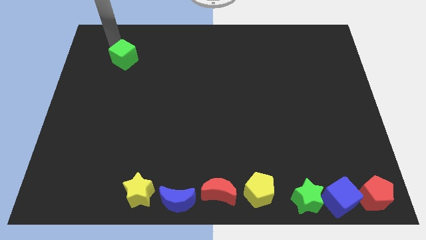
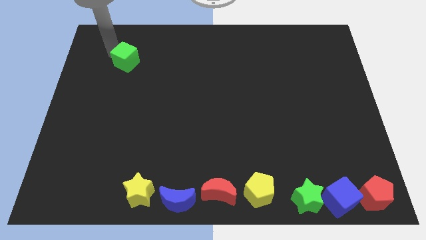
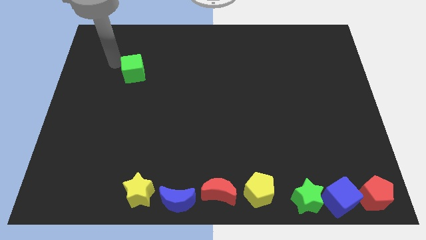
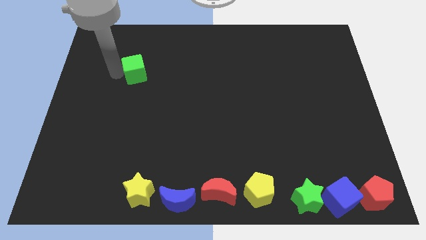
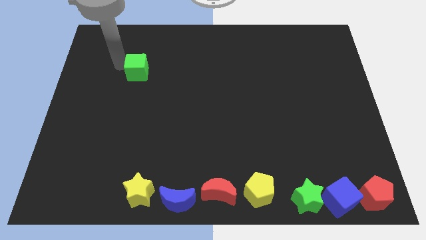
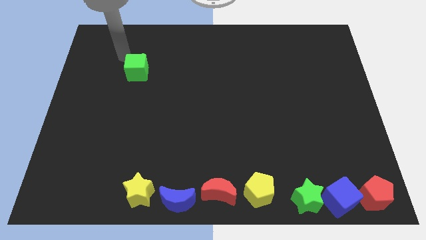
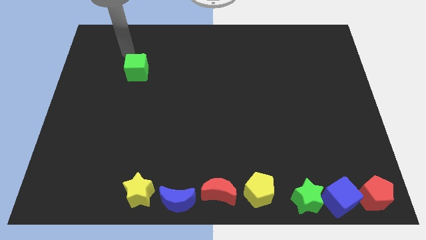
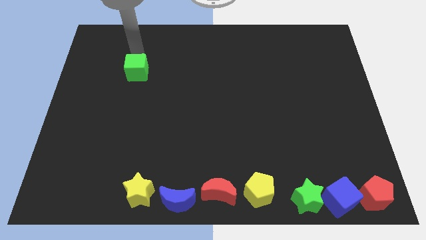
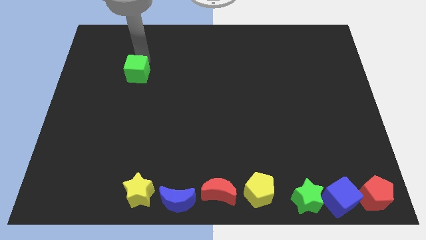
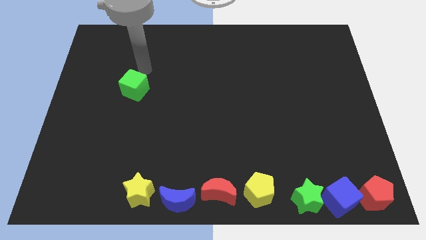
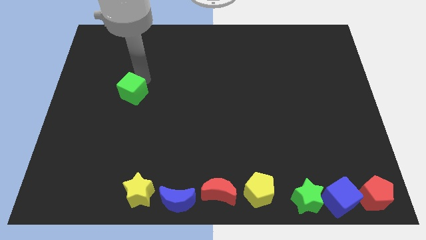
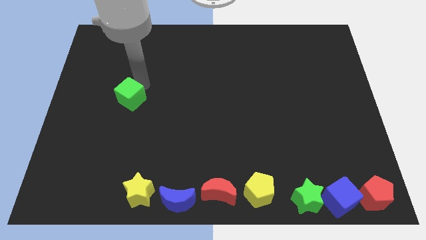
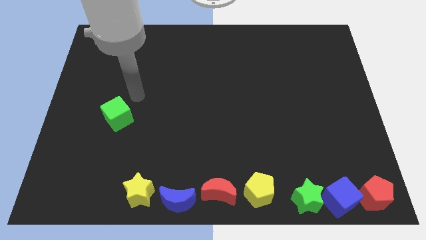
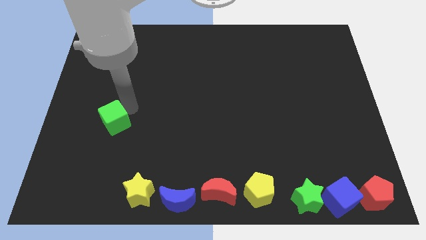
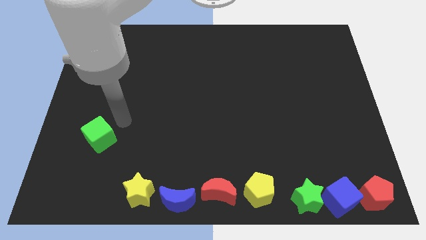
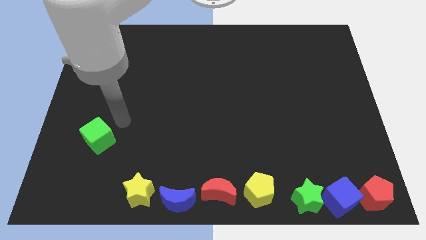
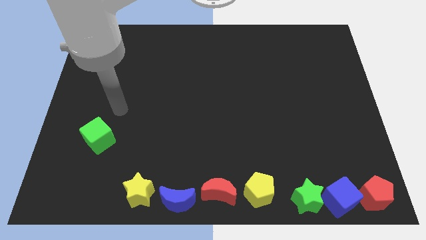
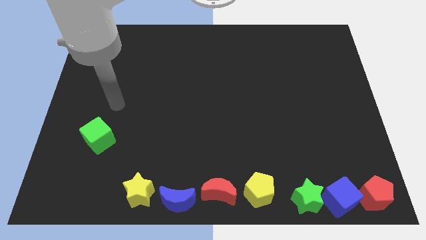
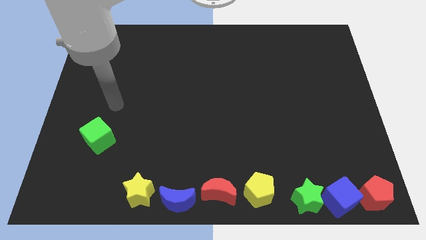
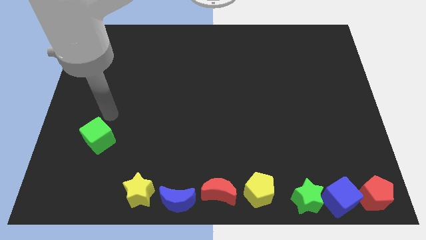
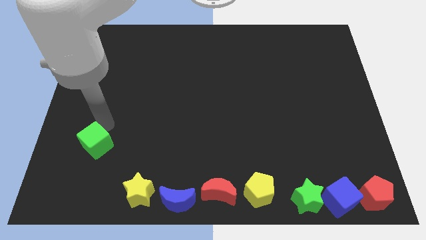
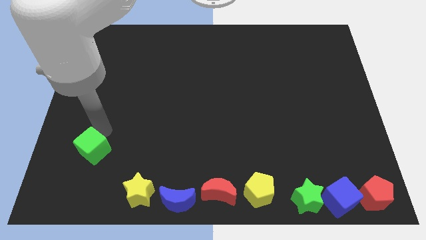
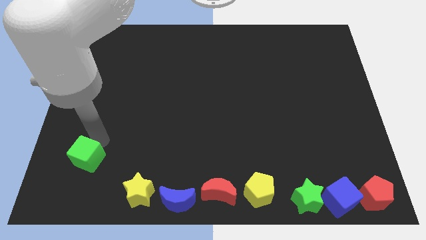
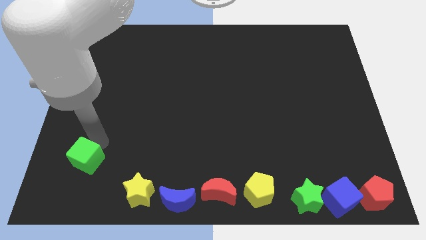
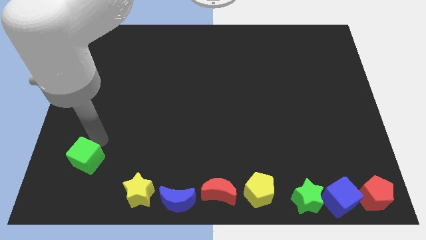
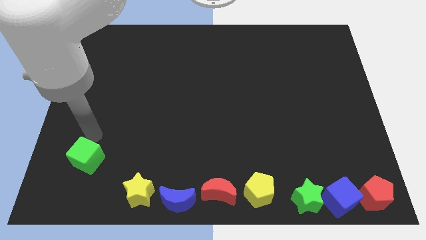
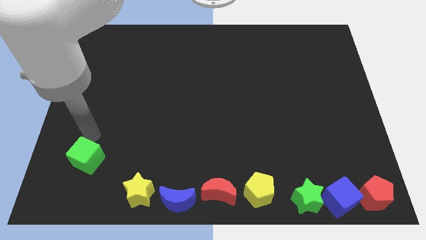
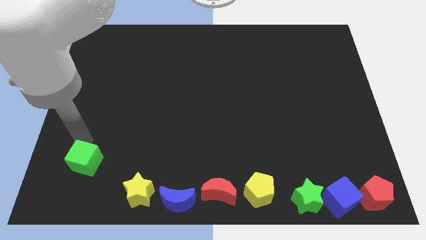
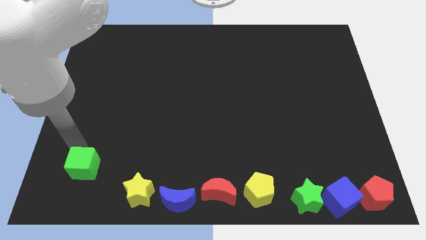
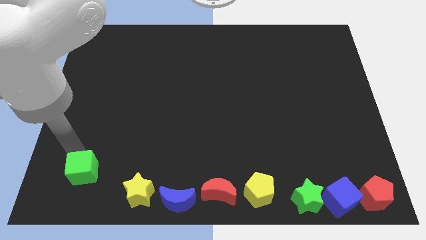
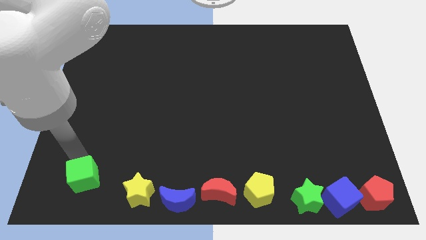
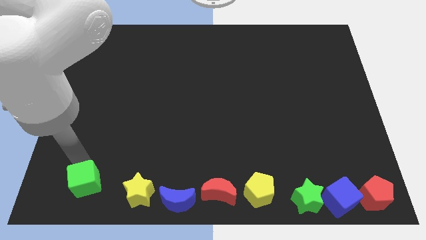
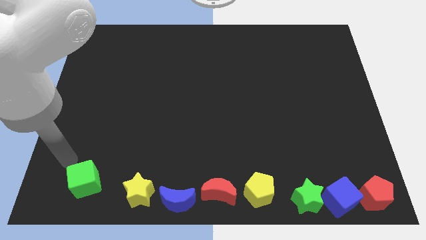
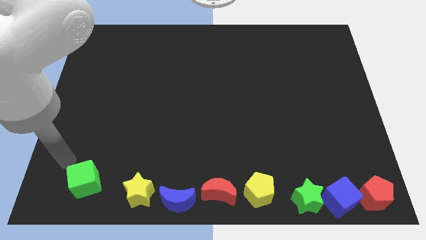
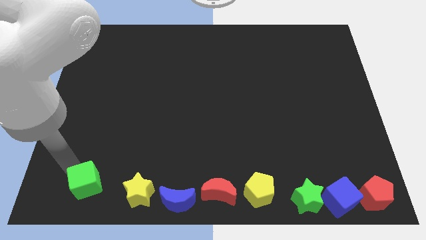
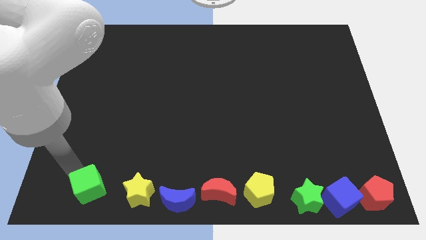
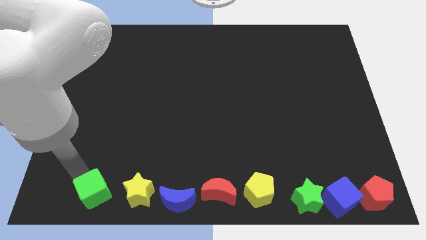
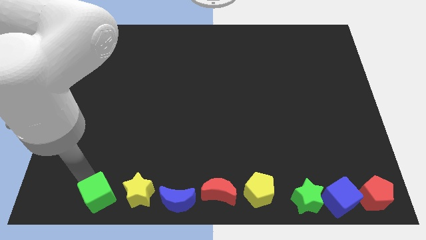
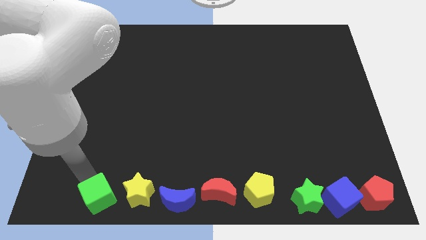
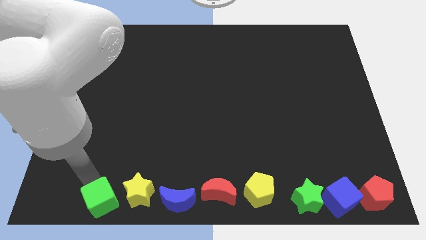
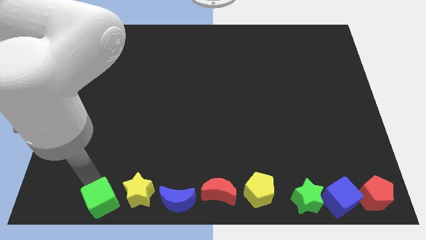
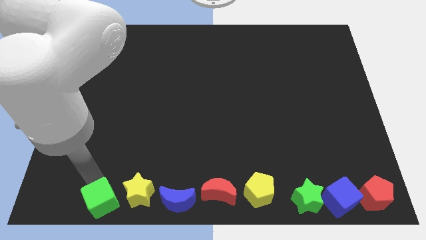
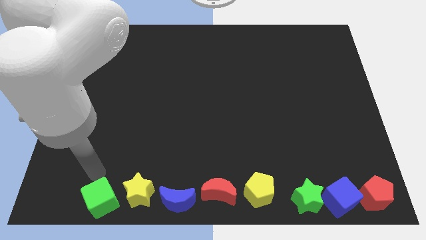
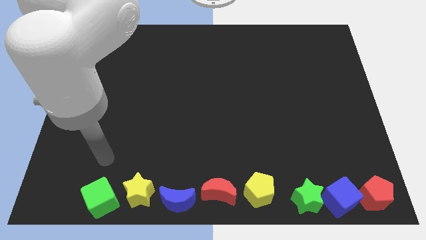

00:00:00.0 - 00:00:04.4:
move the green cube to the left side of the yellow star

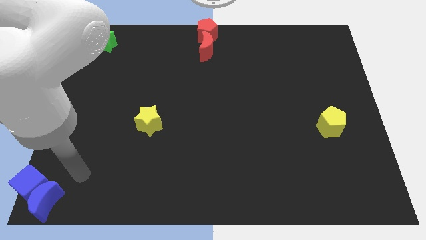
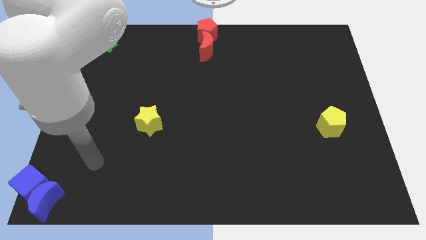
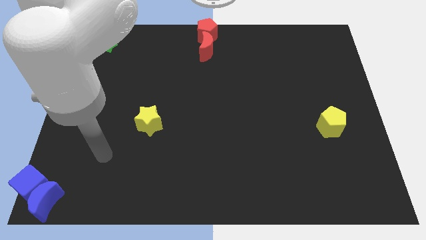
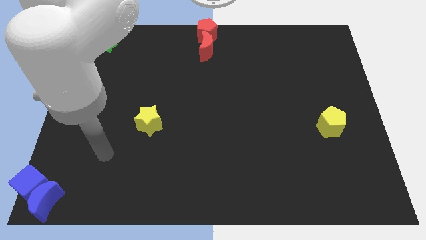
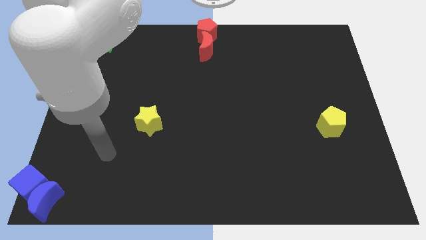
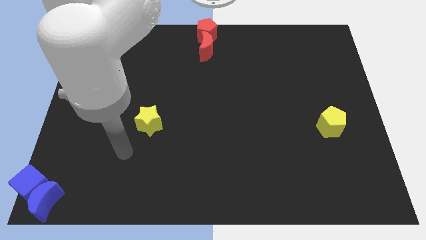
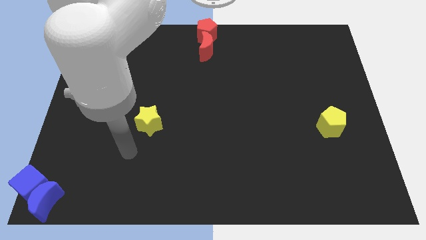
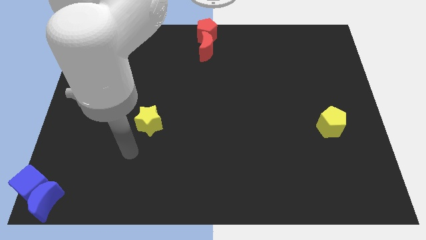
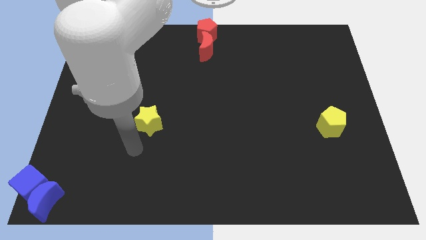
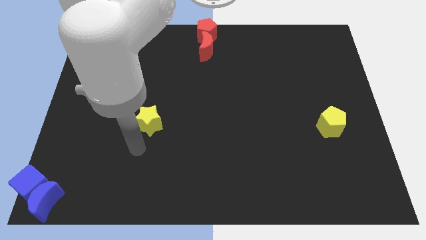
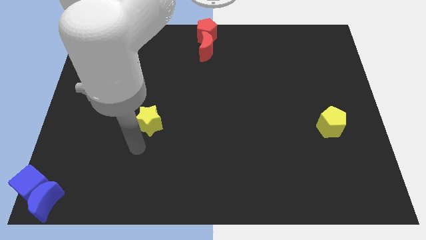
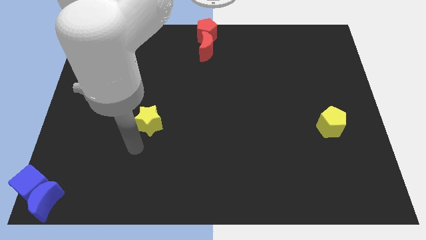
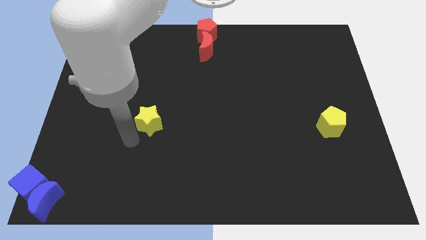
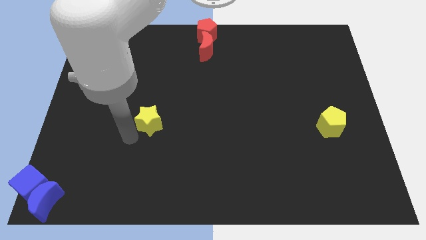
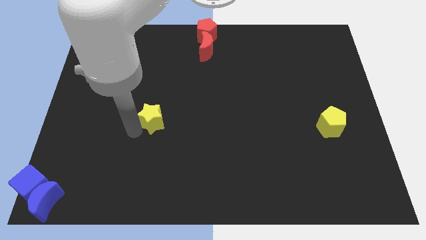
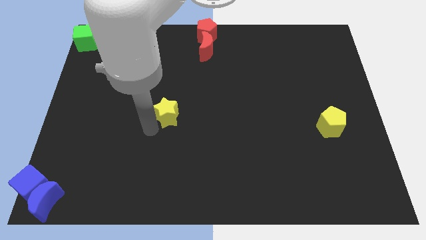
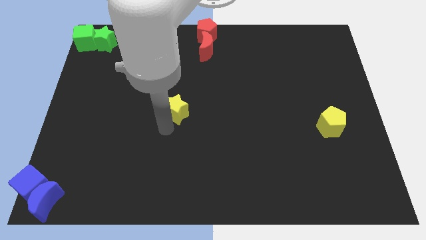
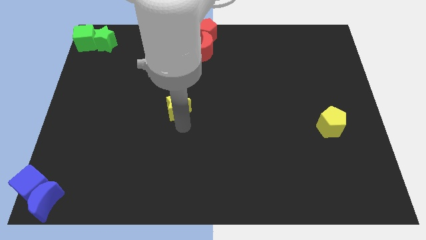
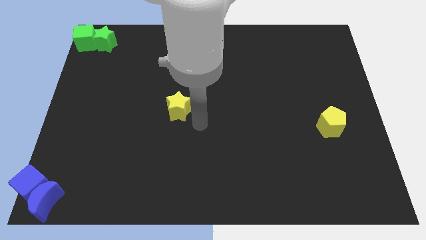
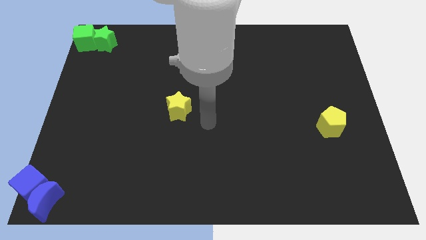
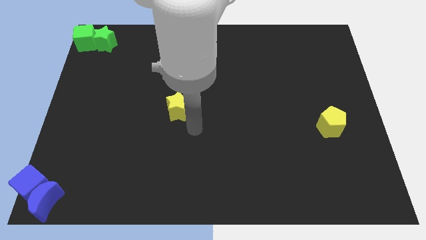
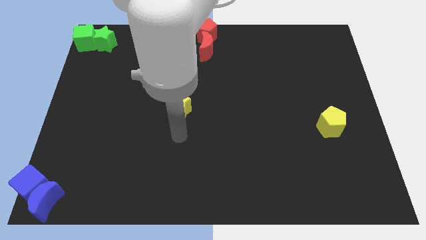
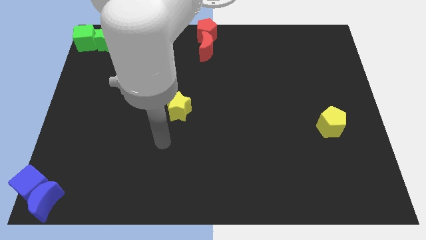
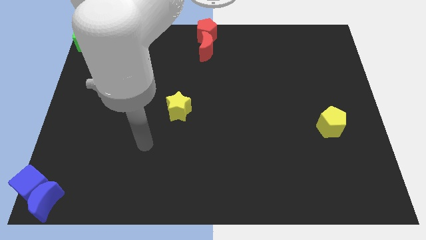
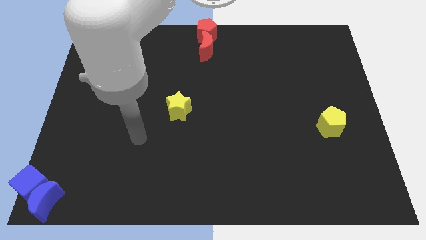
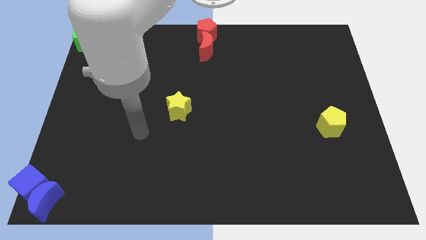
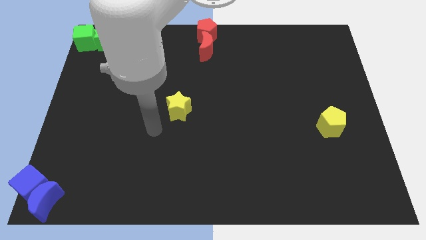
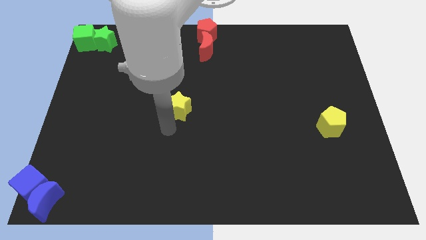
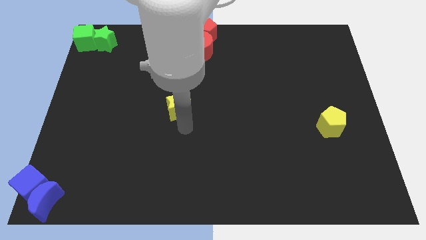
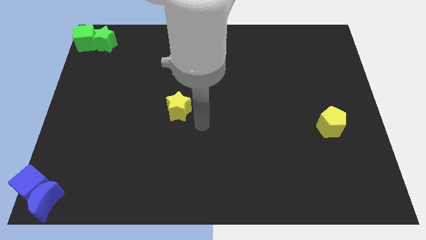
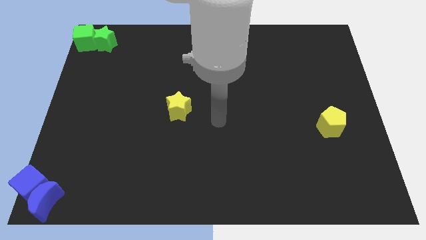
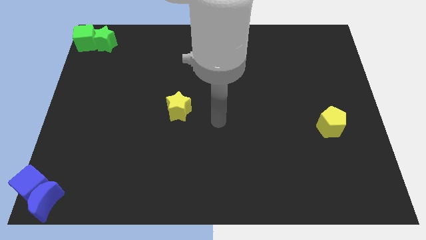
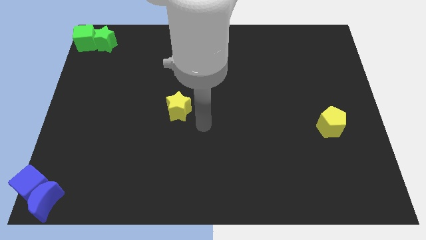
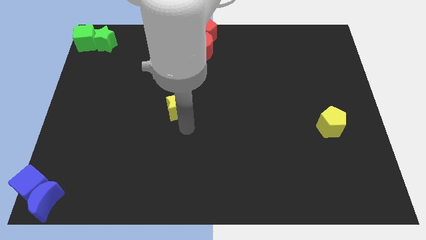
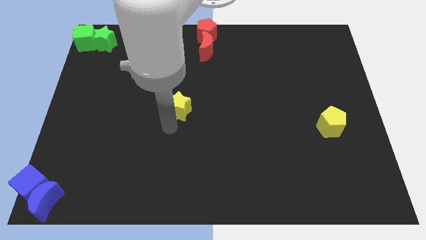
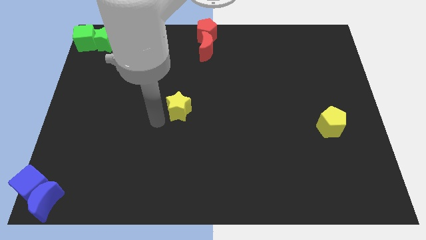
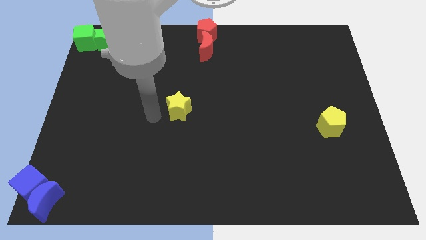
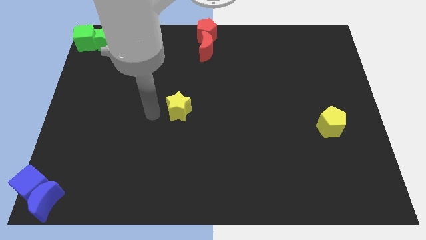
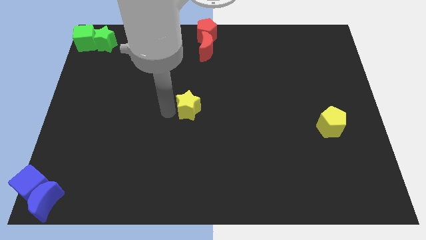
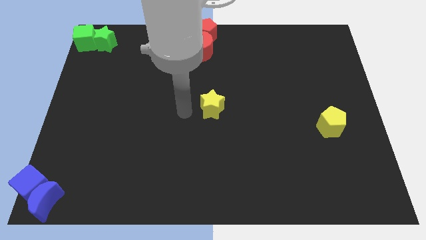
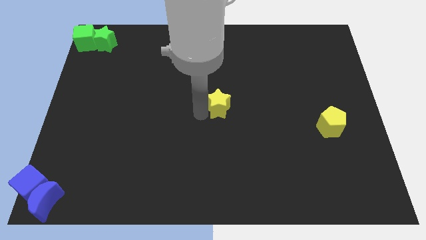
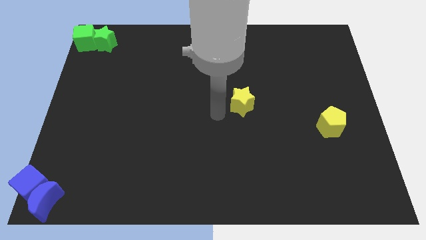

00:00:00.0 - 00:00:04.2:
slide the yellow star to the center of the board

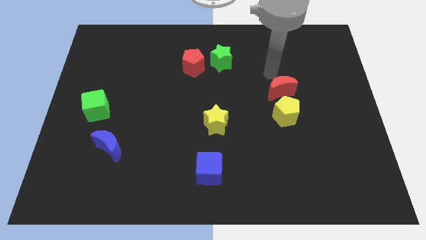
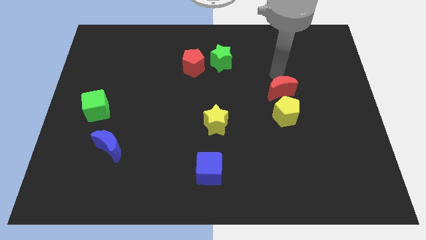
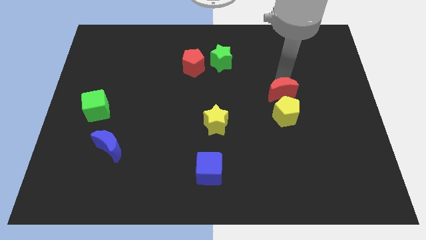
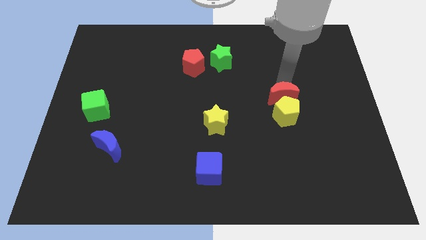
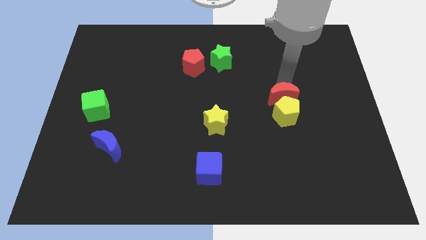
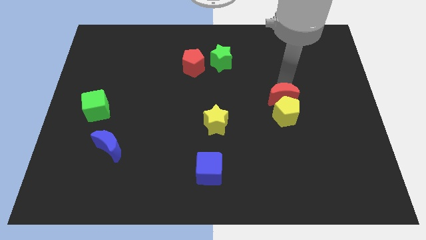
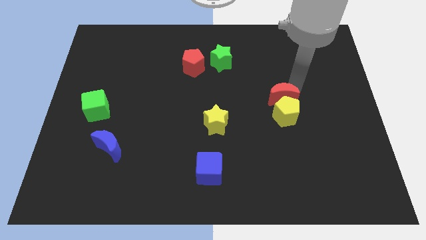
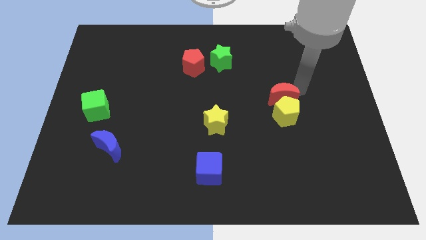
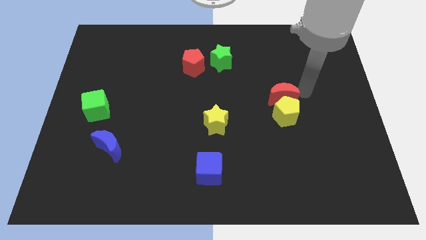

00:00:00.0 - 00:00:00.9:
drag the red moon slightly downwards
